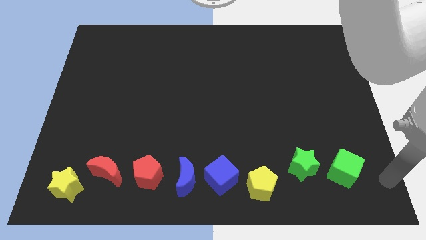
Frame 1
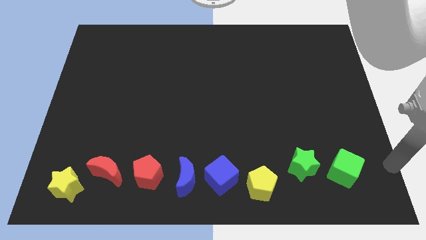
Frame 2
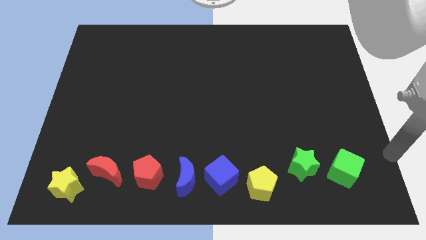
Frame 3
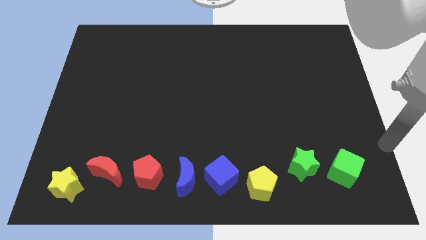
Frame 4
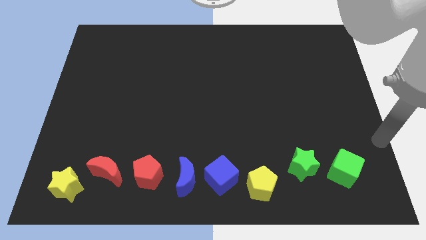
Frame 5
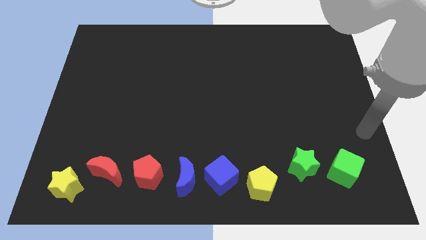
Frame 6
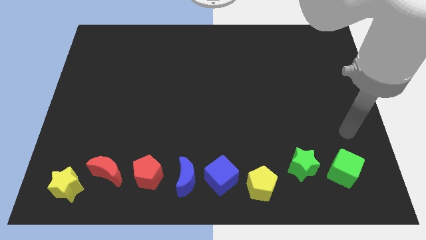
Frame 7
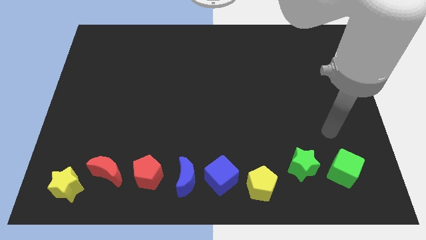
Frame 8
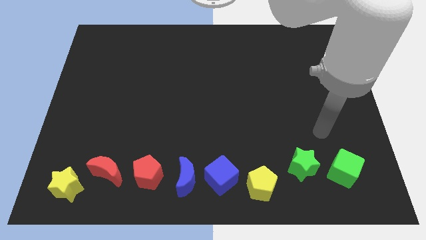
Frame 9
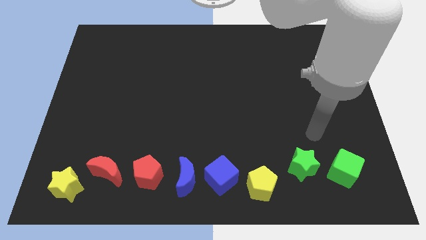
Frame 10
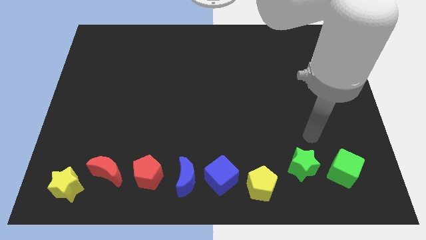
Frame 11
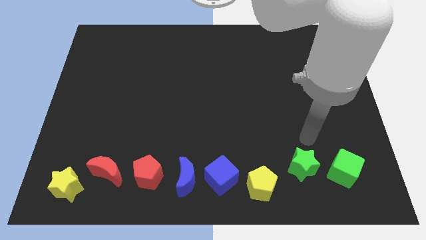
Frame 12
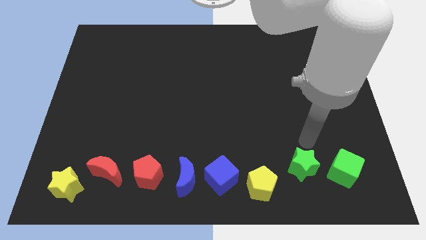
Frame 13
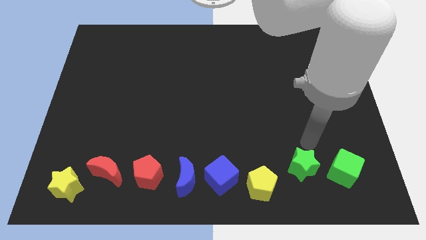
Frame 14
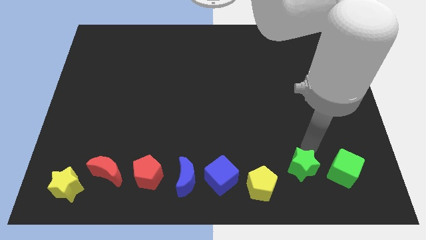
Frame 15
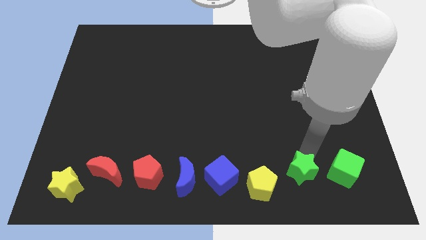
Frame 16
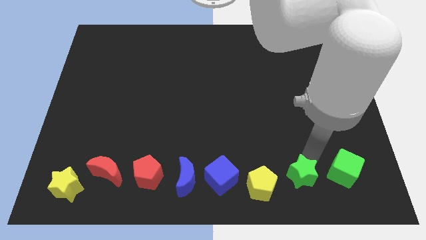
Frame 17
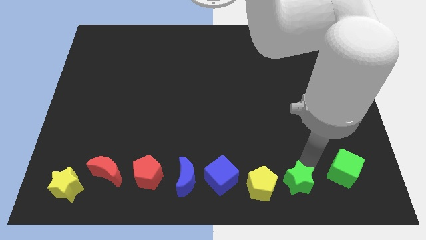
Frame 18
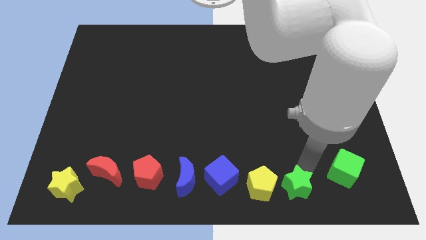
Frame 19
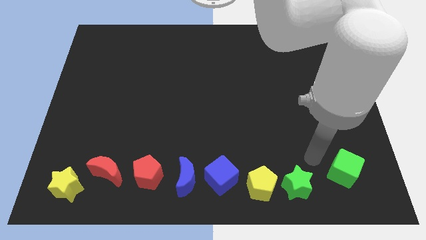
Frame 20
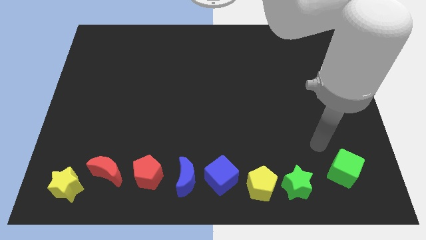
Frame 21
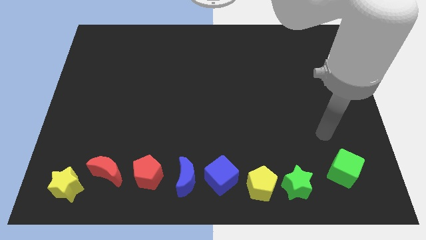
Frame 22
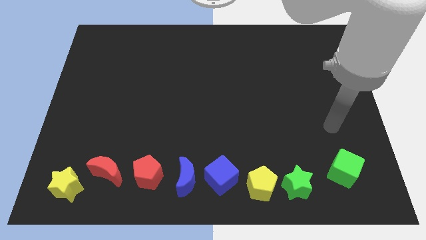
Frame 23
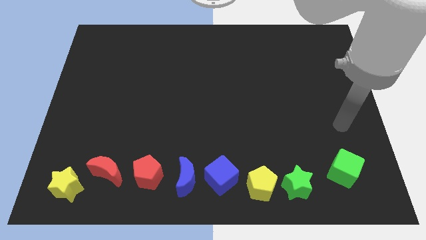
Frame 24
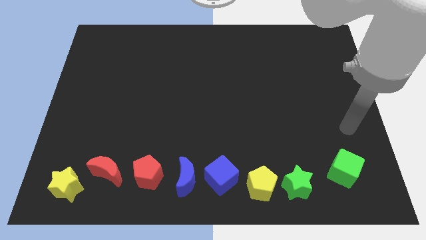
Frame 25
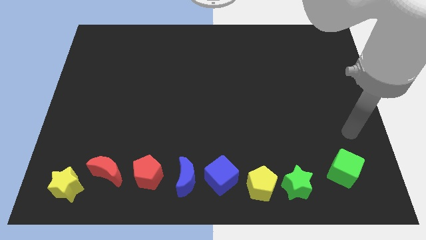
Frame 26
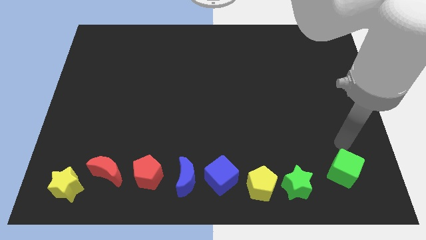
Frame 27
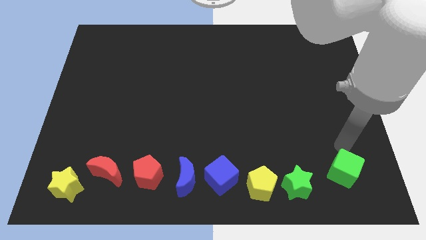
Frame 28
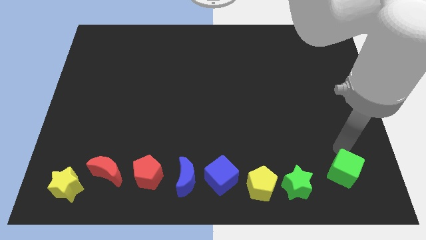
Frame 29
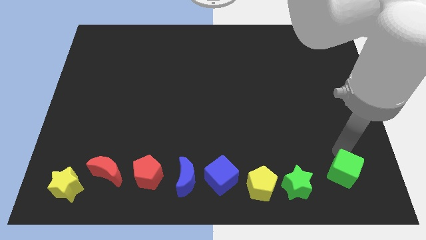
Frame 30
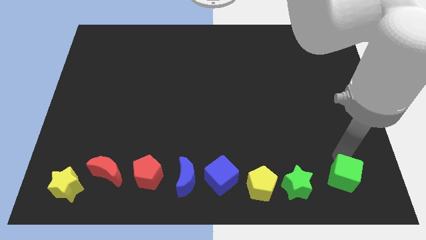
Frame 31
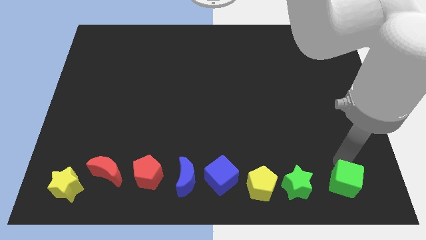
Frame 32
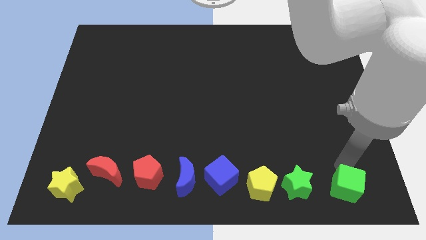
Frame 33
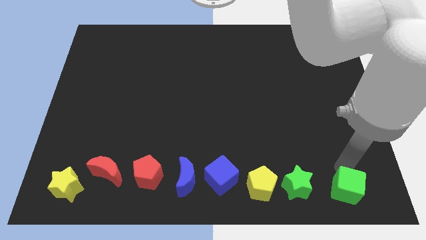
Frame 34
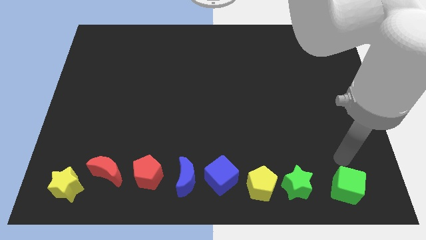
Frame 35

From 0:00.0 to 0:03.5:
put the green cube and green star slightly to the bottom of the board

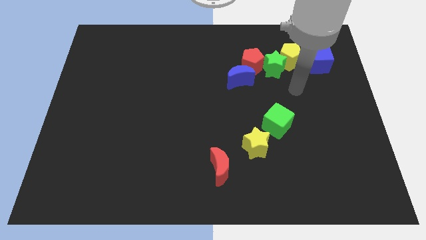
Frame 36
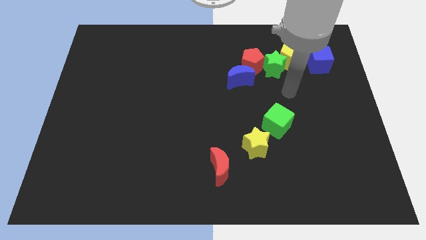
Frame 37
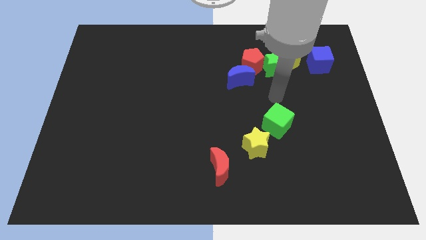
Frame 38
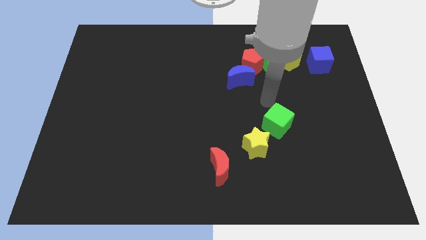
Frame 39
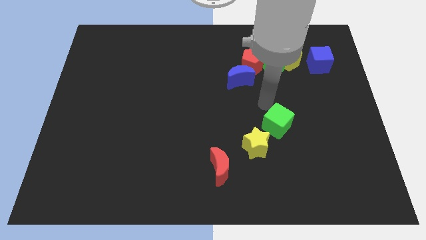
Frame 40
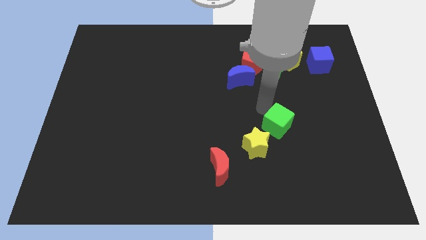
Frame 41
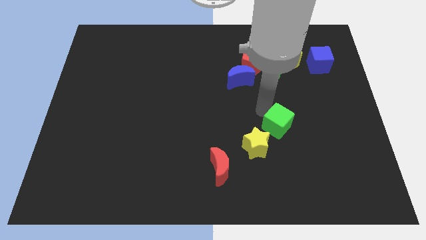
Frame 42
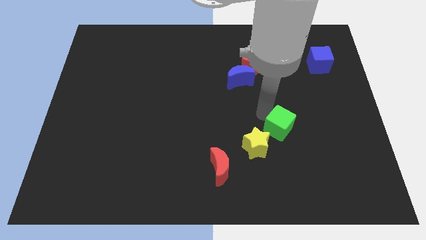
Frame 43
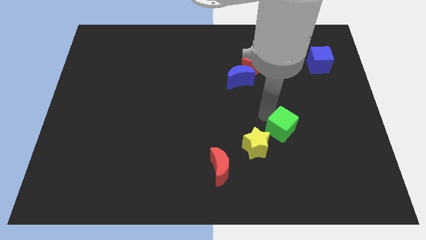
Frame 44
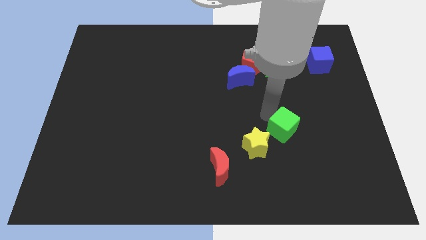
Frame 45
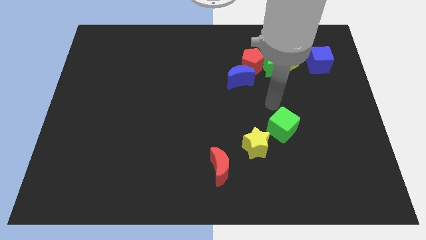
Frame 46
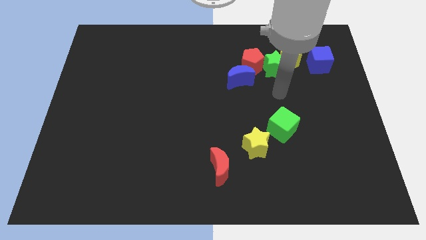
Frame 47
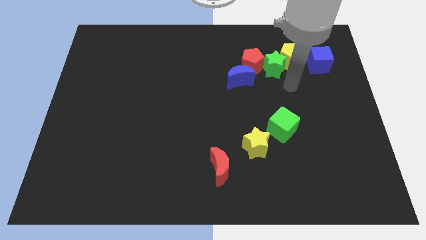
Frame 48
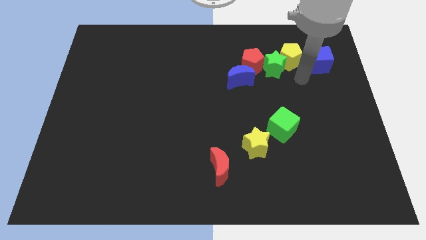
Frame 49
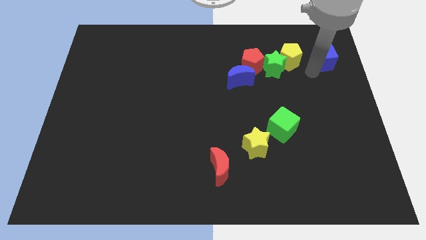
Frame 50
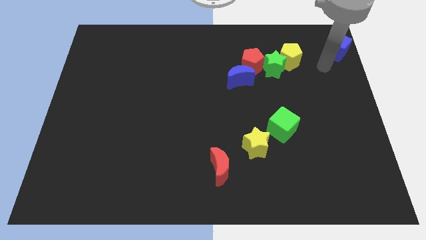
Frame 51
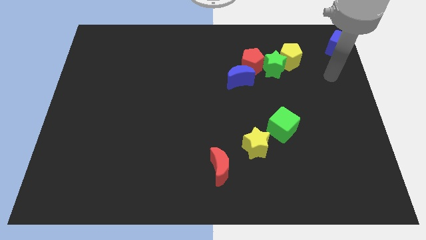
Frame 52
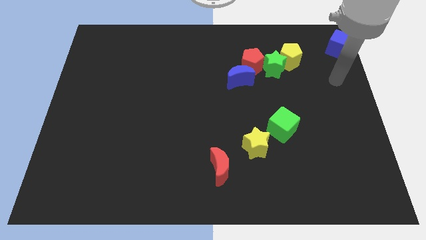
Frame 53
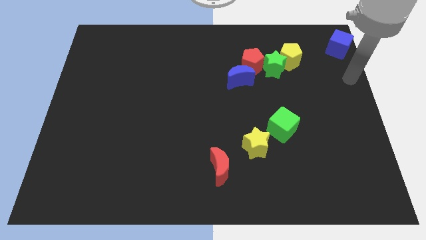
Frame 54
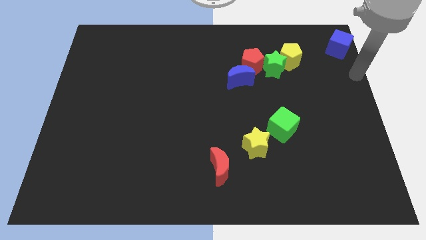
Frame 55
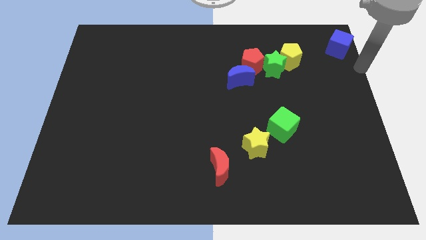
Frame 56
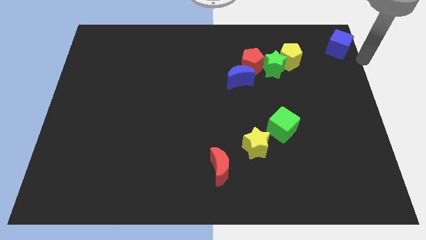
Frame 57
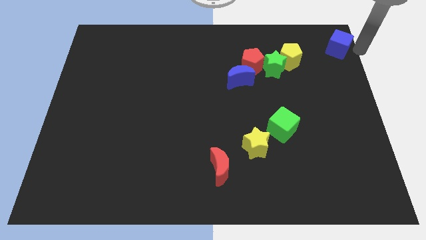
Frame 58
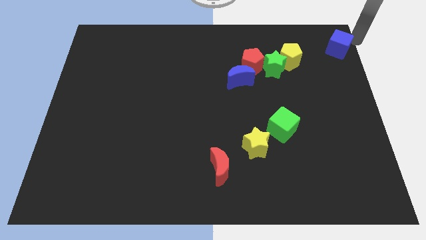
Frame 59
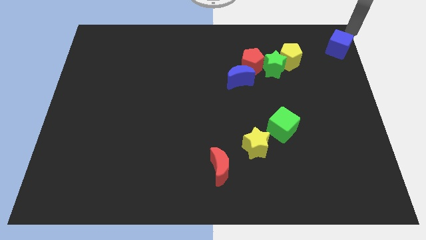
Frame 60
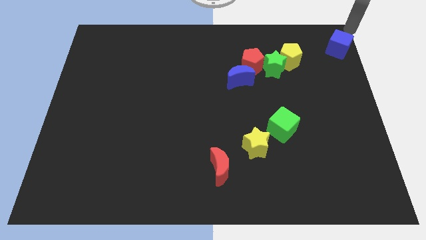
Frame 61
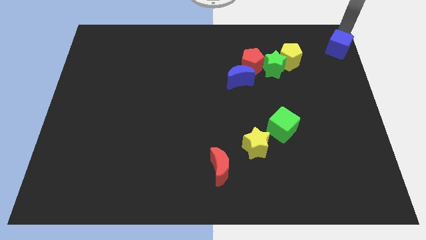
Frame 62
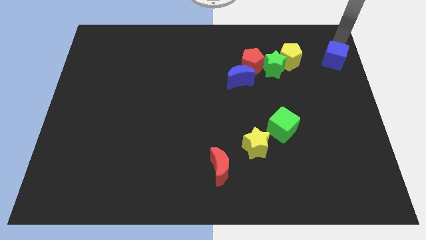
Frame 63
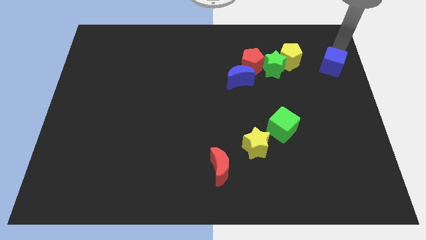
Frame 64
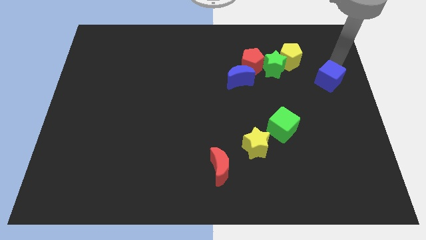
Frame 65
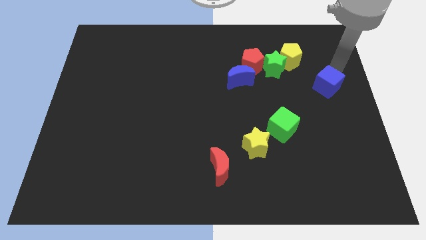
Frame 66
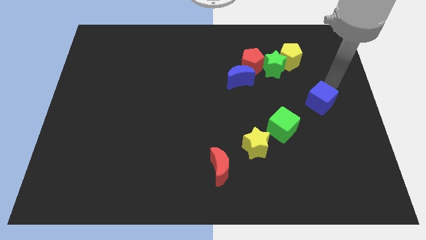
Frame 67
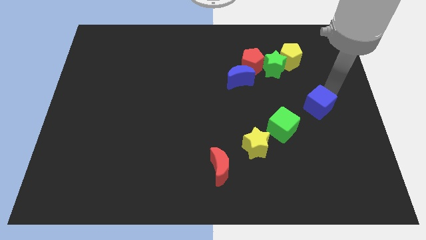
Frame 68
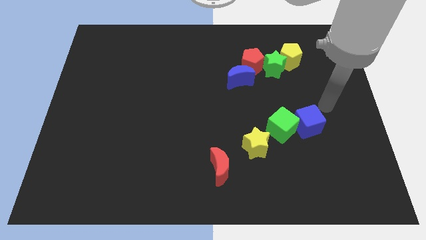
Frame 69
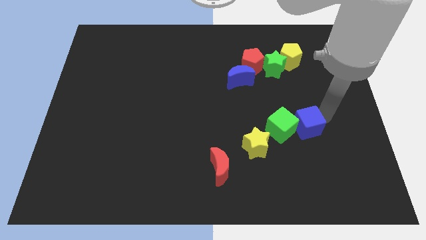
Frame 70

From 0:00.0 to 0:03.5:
place the blue cube right to the green cube

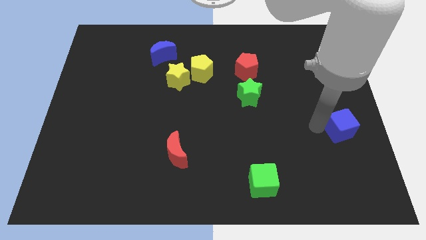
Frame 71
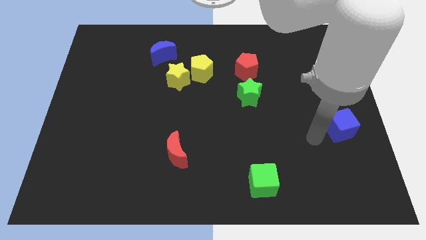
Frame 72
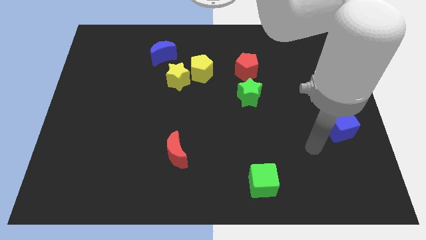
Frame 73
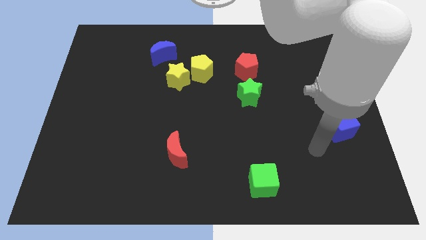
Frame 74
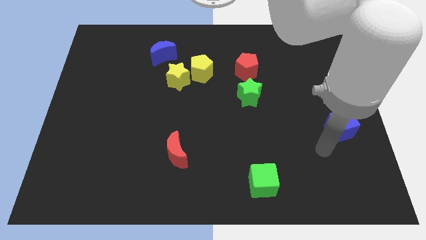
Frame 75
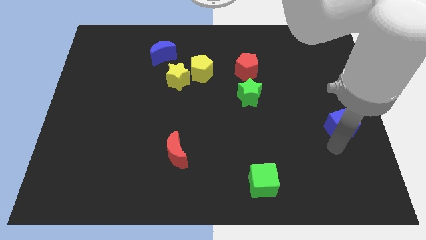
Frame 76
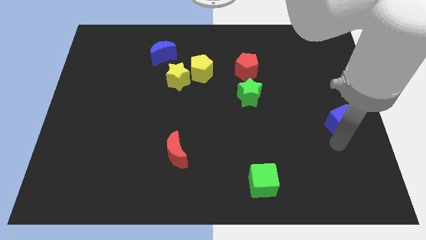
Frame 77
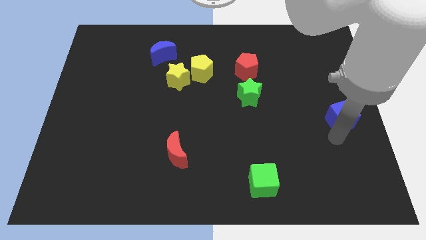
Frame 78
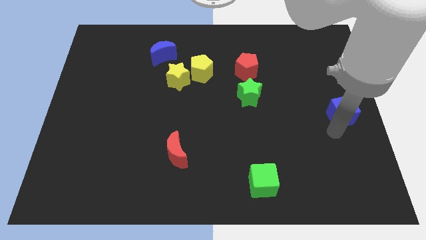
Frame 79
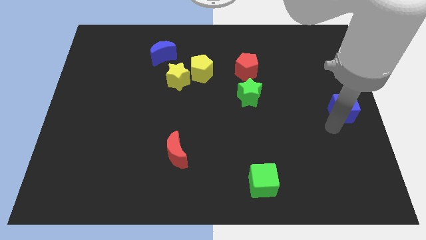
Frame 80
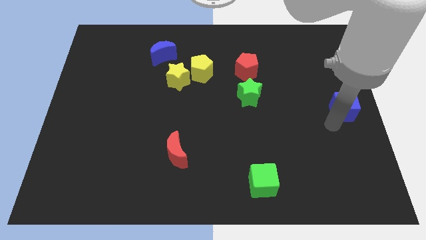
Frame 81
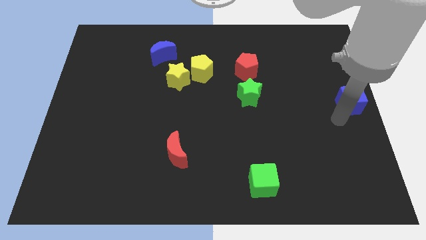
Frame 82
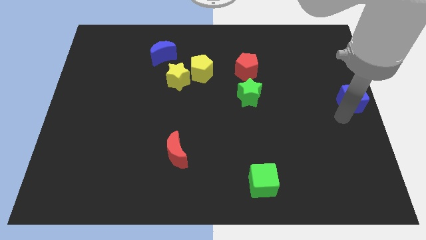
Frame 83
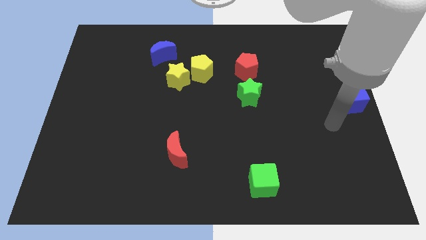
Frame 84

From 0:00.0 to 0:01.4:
place blue cube on the right side of the board

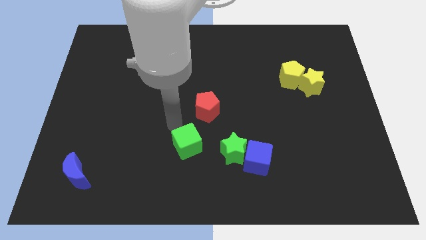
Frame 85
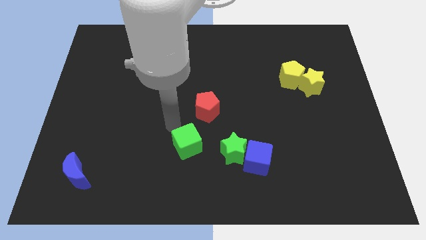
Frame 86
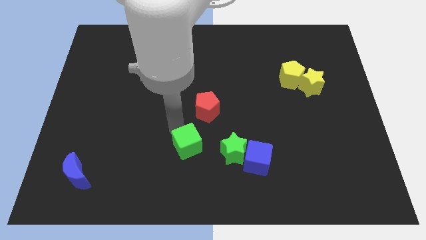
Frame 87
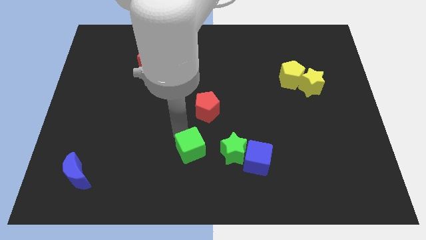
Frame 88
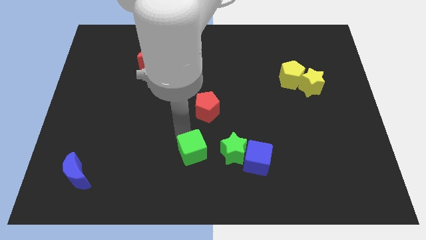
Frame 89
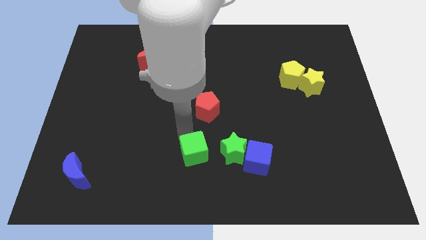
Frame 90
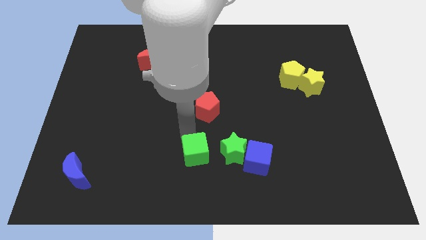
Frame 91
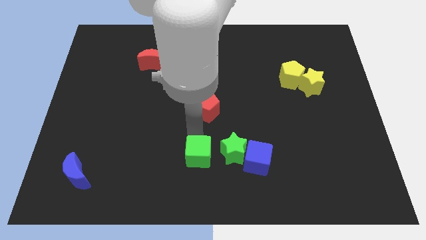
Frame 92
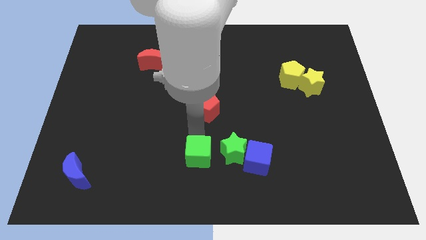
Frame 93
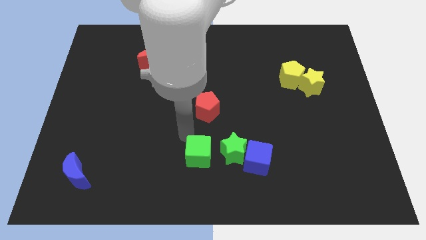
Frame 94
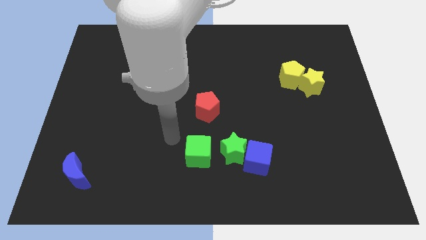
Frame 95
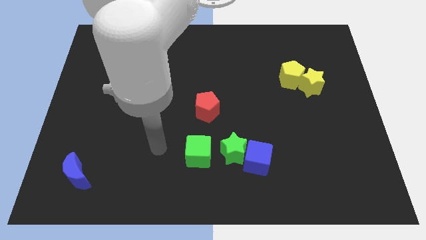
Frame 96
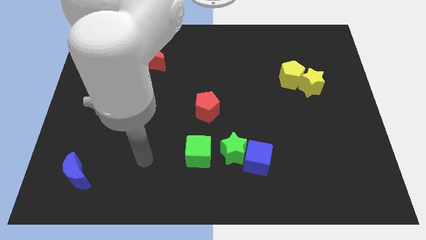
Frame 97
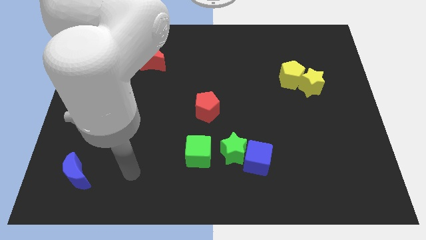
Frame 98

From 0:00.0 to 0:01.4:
place the green cube parallel to green star
